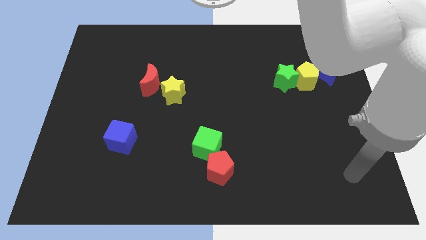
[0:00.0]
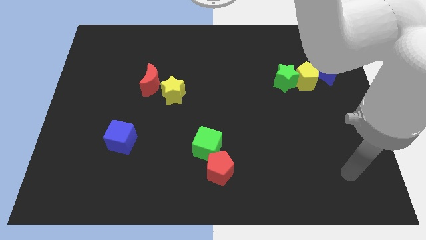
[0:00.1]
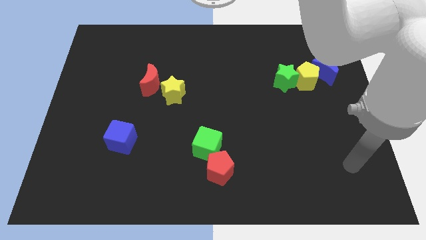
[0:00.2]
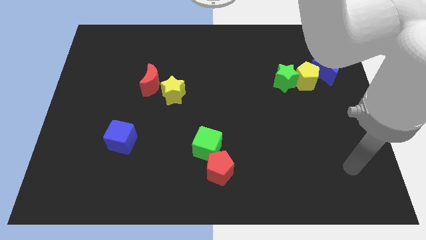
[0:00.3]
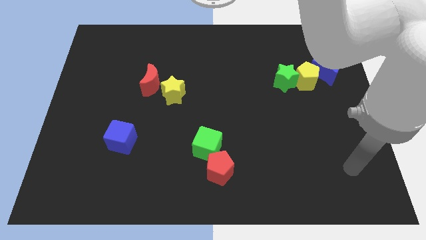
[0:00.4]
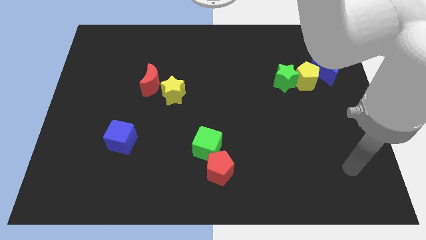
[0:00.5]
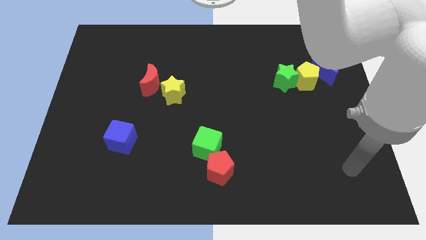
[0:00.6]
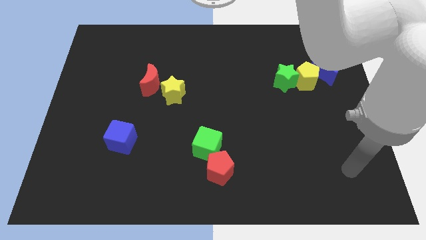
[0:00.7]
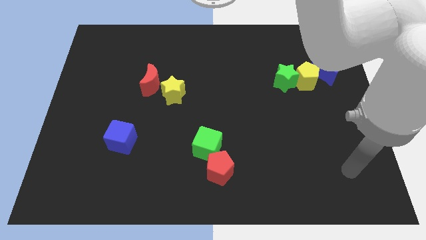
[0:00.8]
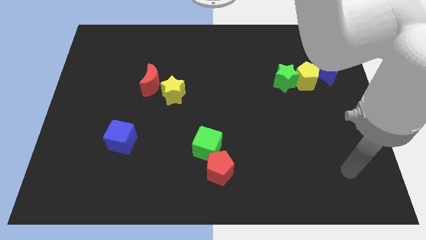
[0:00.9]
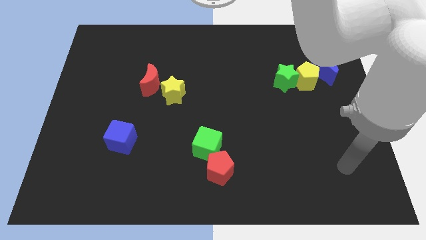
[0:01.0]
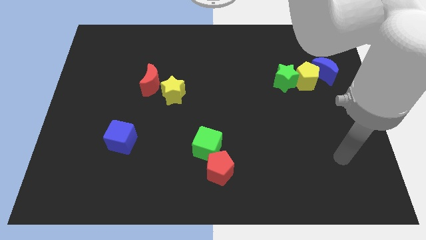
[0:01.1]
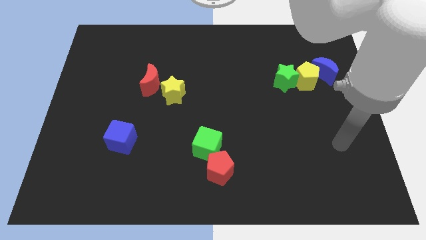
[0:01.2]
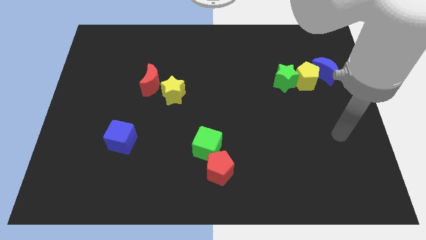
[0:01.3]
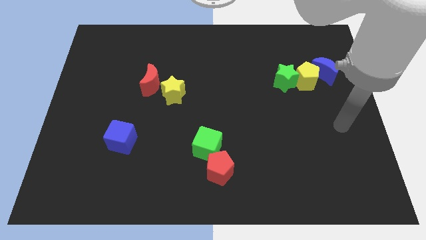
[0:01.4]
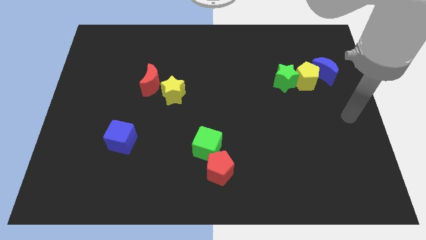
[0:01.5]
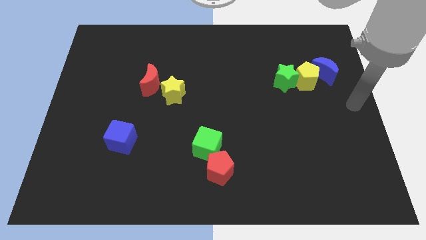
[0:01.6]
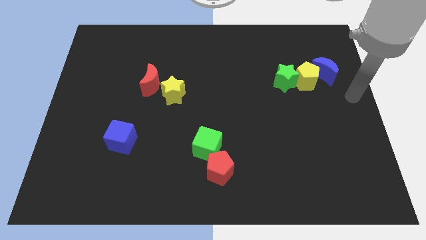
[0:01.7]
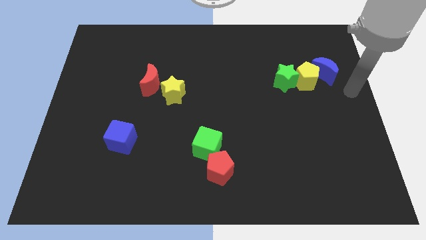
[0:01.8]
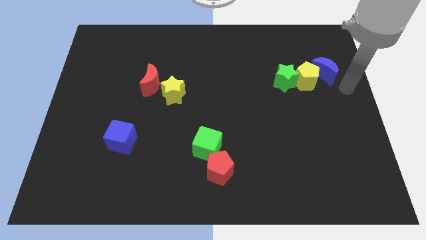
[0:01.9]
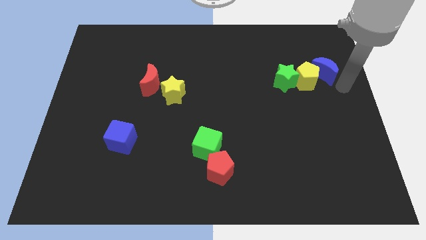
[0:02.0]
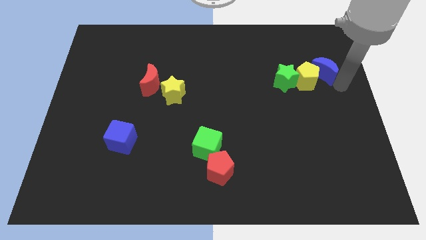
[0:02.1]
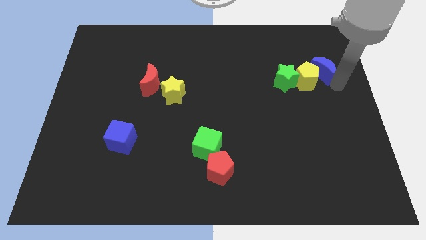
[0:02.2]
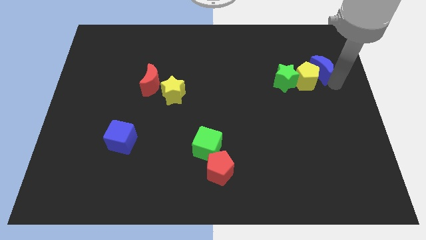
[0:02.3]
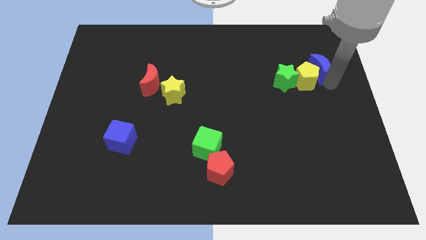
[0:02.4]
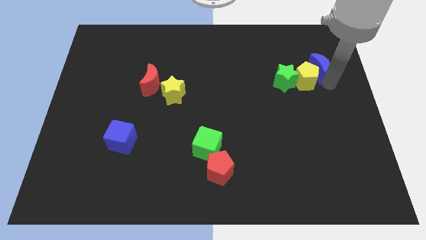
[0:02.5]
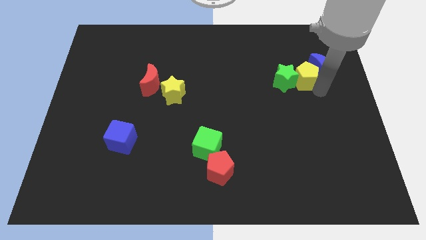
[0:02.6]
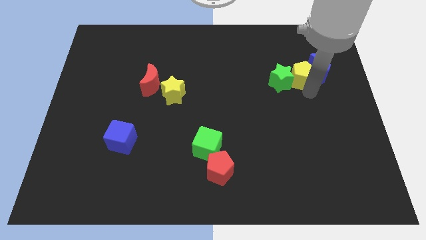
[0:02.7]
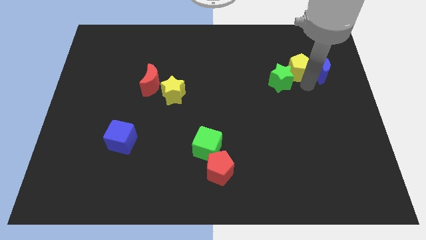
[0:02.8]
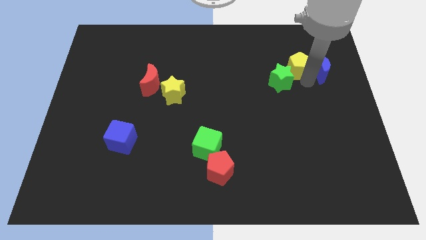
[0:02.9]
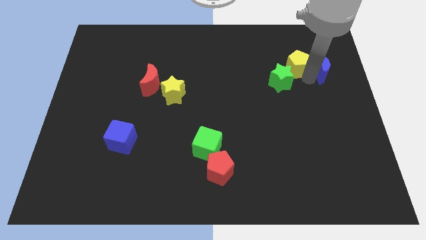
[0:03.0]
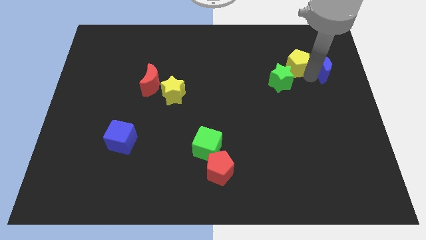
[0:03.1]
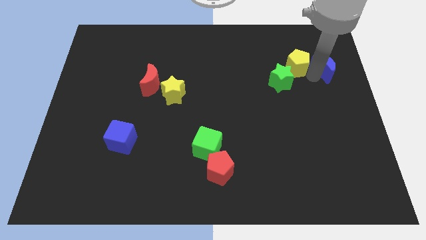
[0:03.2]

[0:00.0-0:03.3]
separate the yellow pentagon from the green star and blue crescent

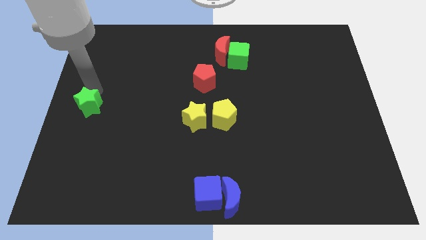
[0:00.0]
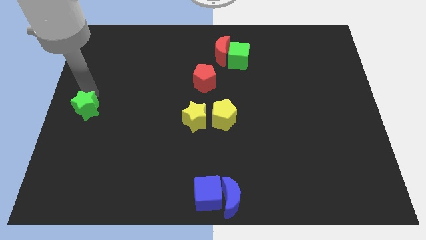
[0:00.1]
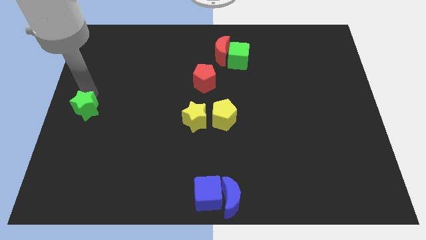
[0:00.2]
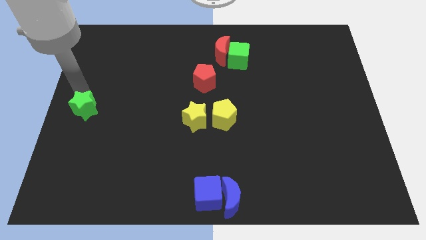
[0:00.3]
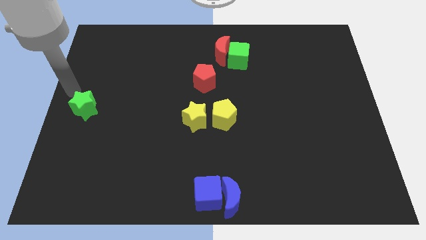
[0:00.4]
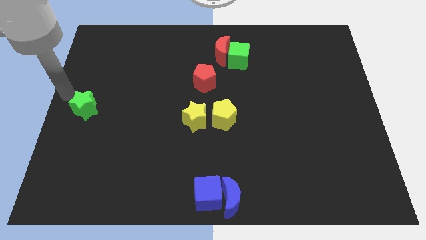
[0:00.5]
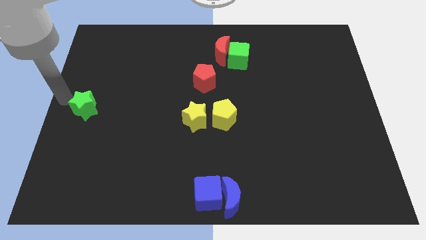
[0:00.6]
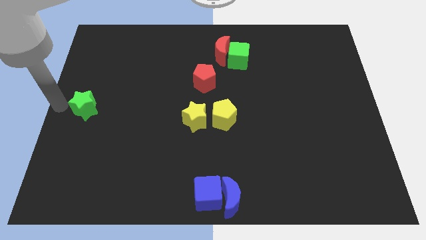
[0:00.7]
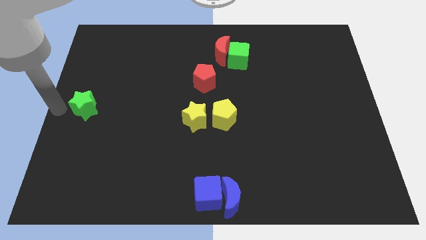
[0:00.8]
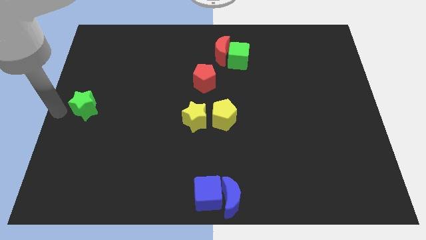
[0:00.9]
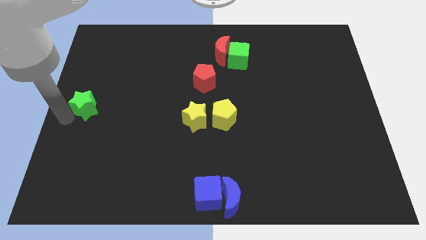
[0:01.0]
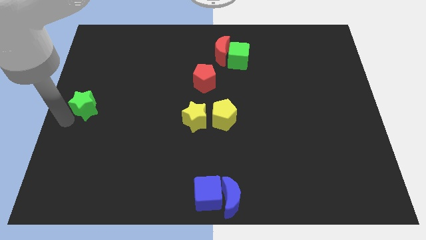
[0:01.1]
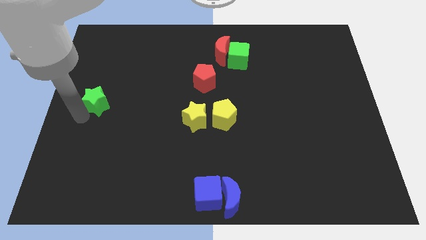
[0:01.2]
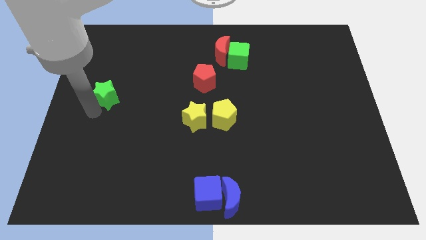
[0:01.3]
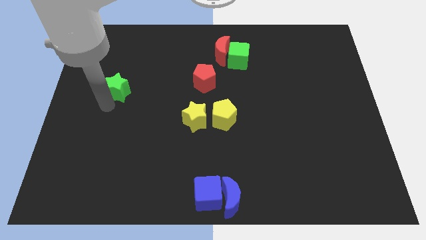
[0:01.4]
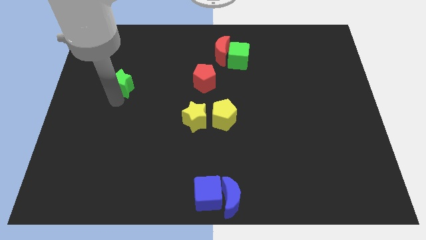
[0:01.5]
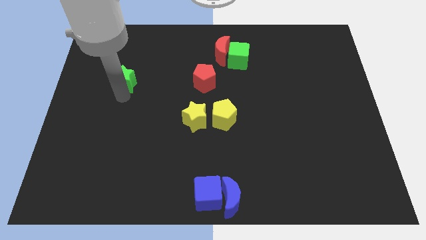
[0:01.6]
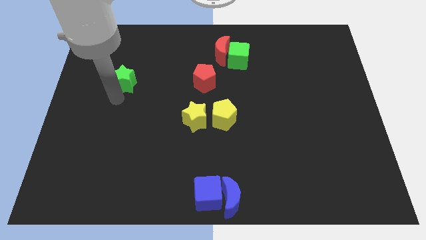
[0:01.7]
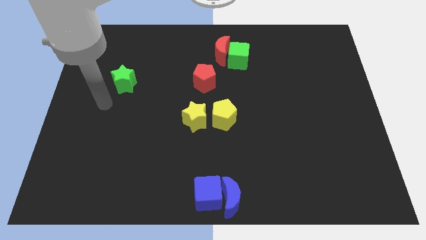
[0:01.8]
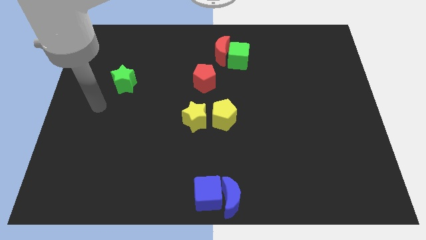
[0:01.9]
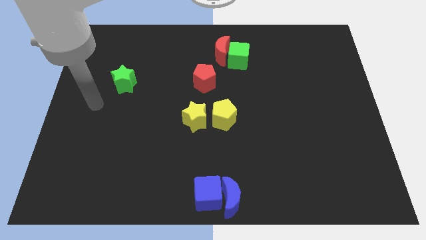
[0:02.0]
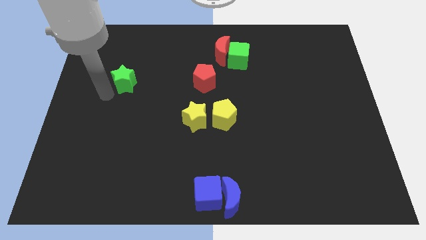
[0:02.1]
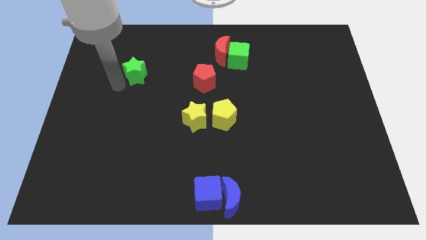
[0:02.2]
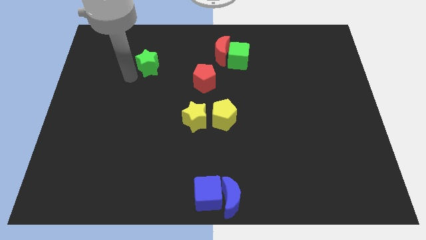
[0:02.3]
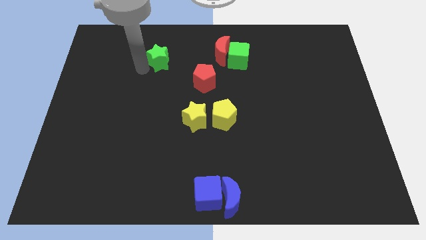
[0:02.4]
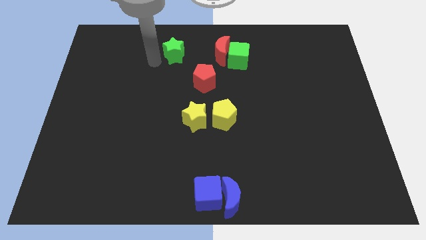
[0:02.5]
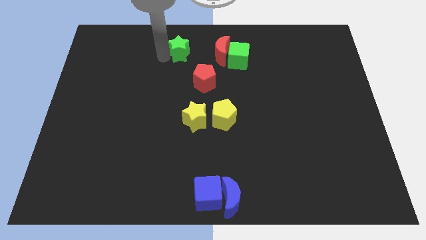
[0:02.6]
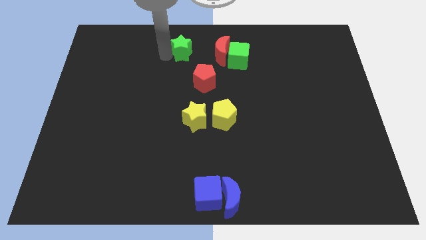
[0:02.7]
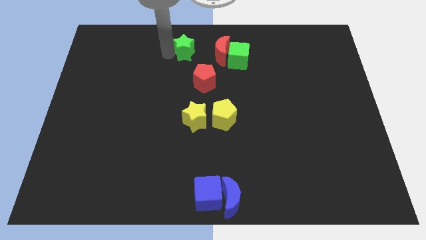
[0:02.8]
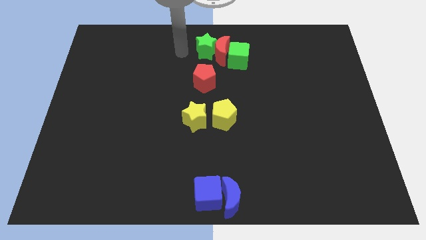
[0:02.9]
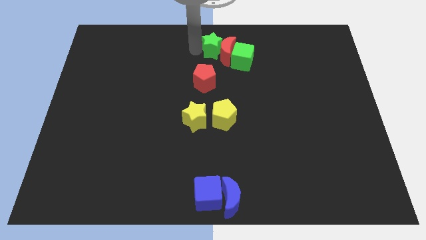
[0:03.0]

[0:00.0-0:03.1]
place the green star left to the red moon

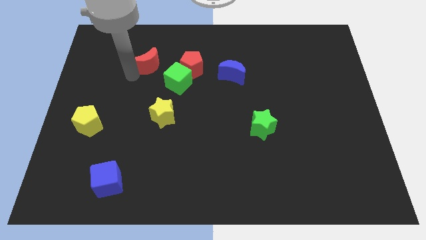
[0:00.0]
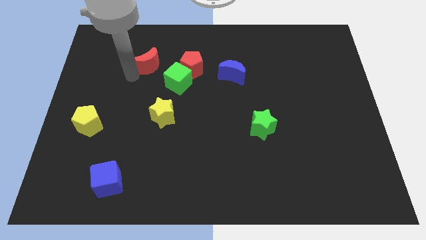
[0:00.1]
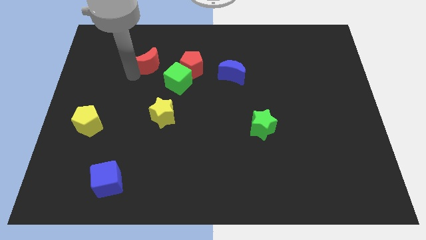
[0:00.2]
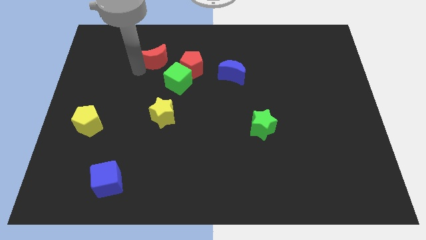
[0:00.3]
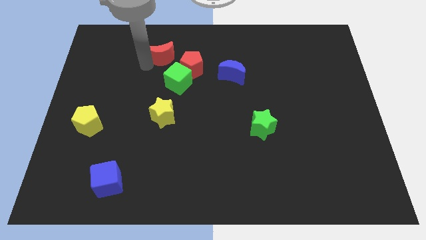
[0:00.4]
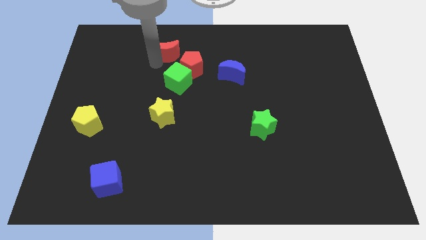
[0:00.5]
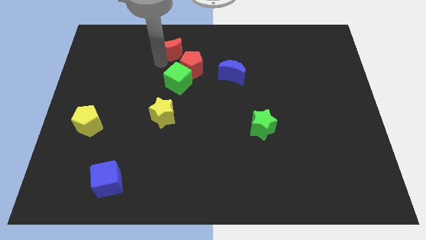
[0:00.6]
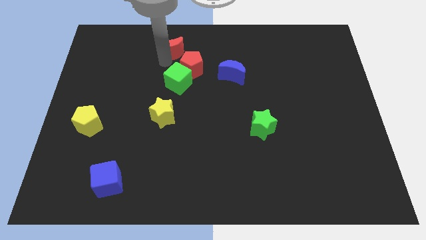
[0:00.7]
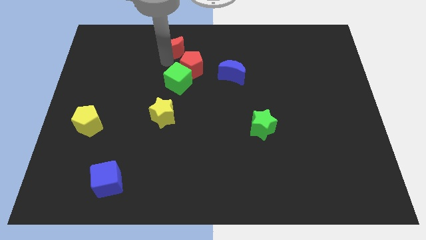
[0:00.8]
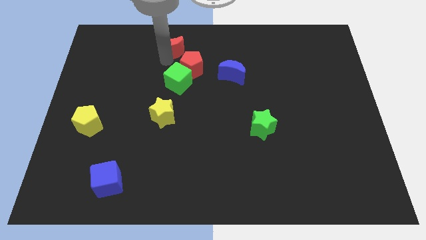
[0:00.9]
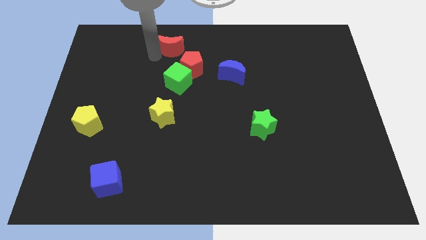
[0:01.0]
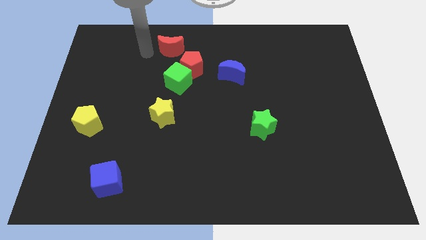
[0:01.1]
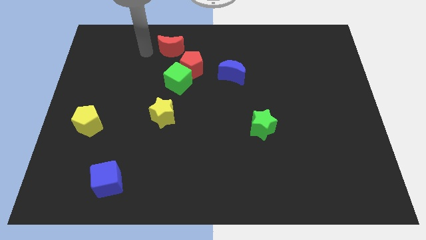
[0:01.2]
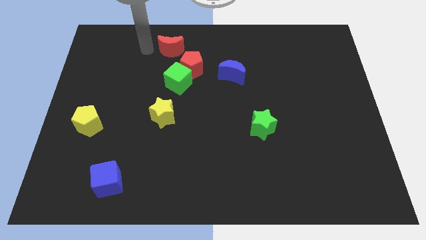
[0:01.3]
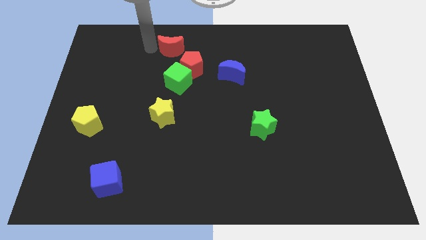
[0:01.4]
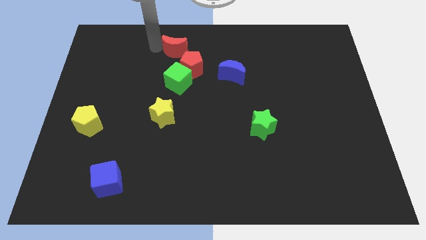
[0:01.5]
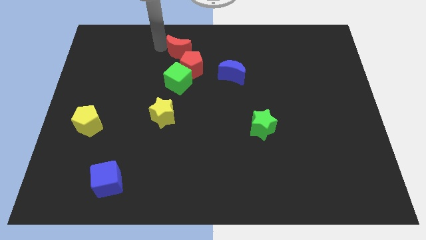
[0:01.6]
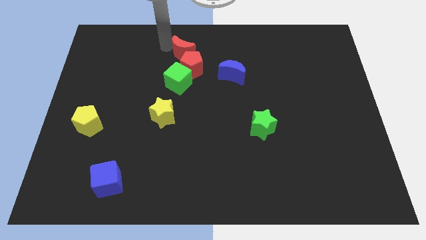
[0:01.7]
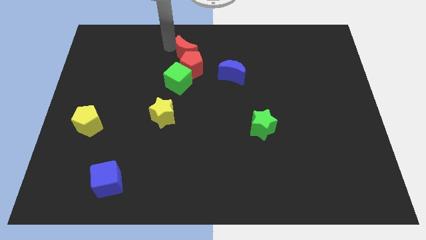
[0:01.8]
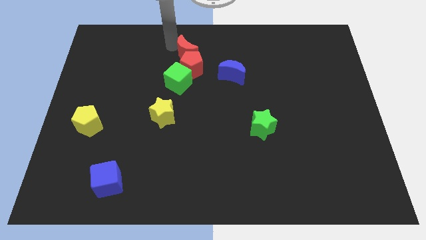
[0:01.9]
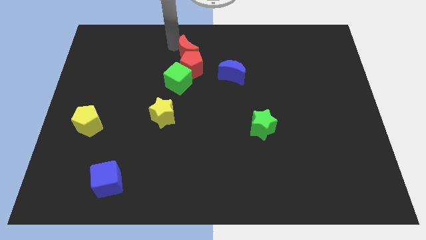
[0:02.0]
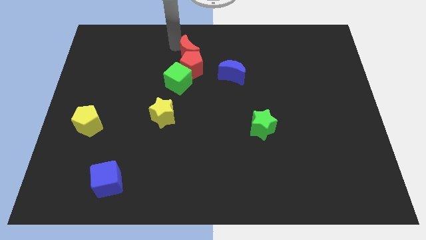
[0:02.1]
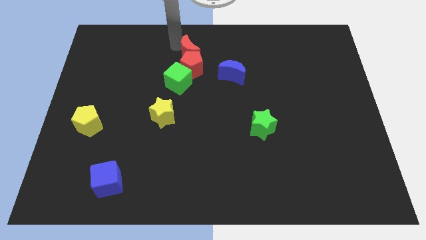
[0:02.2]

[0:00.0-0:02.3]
place the red crescent on top of red pentagon

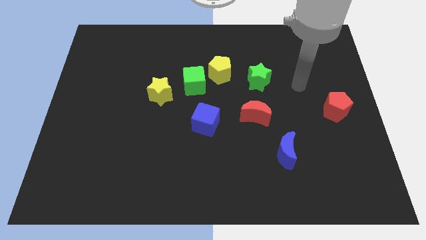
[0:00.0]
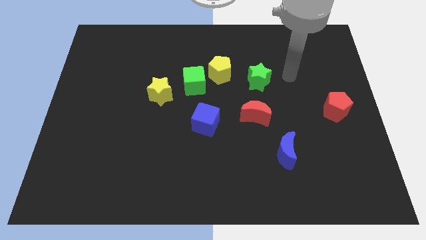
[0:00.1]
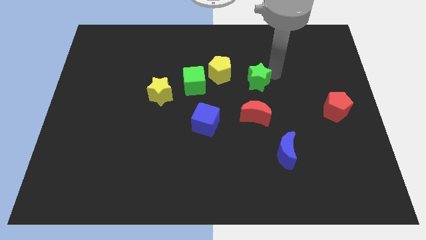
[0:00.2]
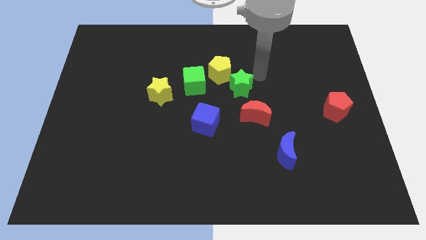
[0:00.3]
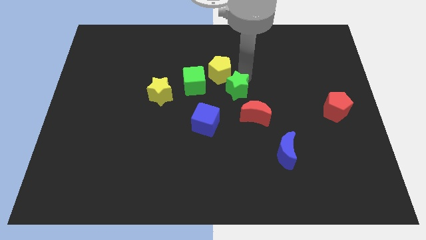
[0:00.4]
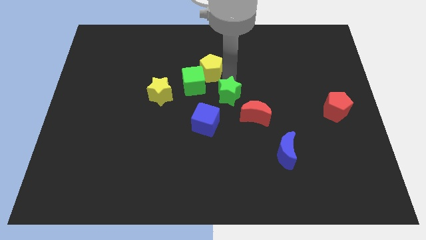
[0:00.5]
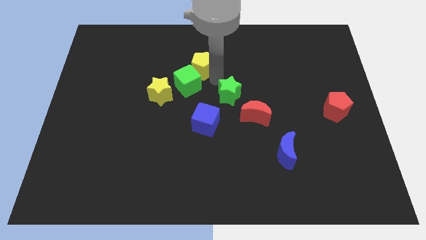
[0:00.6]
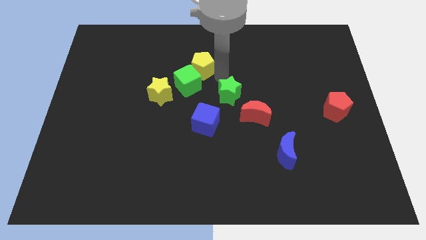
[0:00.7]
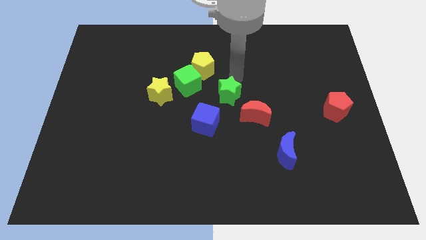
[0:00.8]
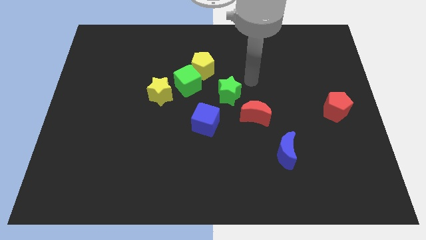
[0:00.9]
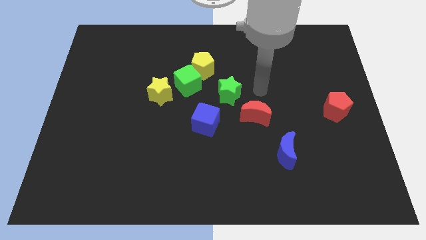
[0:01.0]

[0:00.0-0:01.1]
move the green star to the right of the green cube
